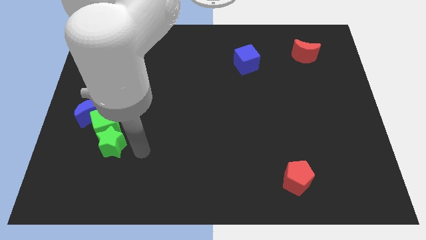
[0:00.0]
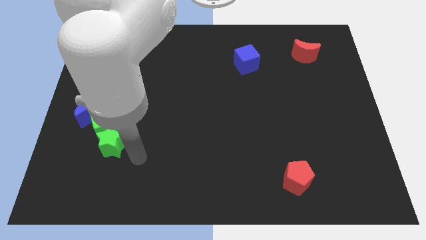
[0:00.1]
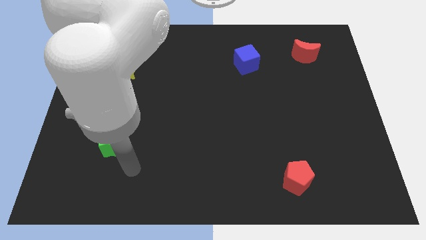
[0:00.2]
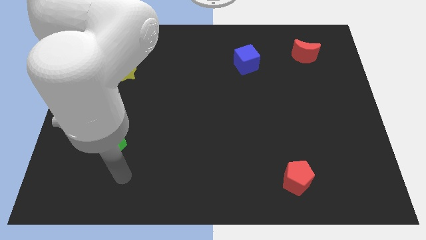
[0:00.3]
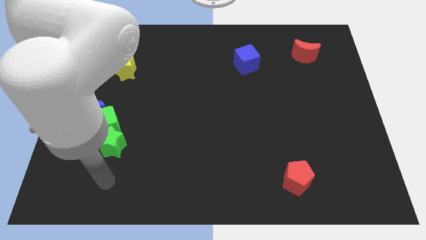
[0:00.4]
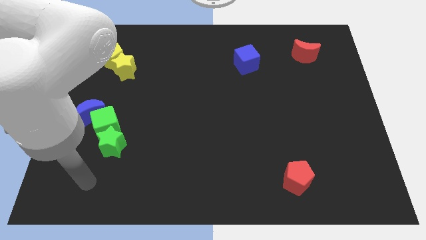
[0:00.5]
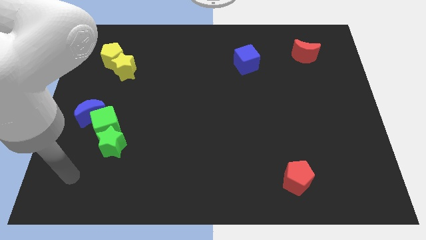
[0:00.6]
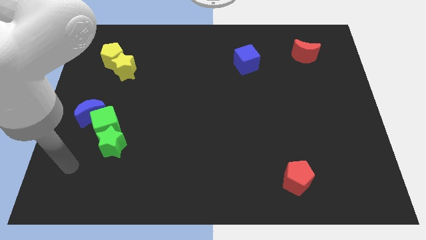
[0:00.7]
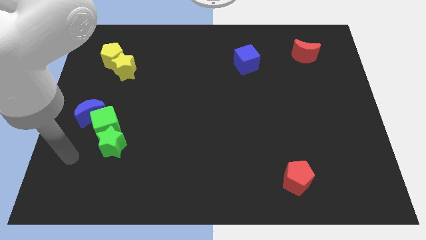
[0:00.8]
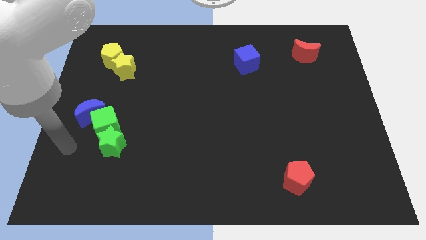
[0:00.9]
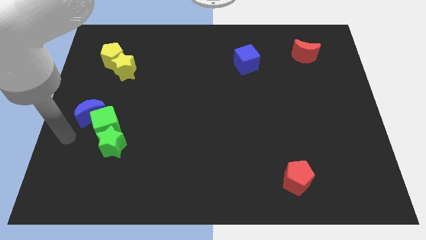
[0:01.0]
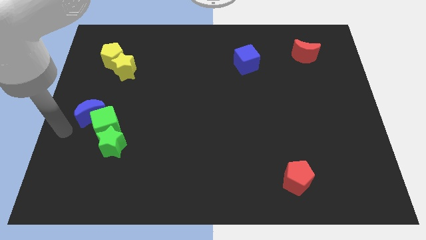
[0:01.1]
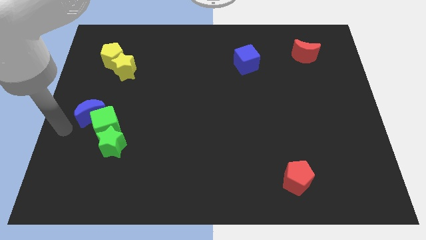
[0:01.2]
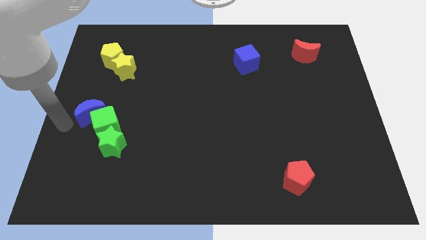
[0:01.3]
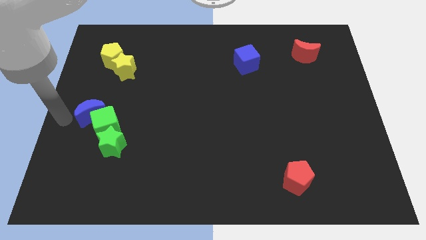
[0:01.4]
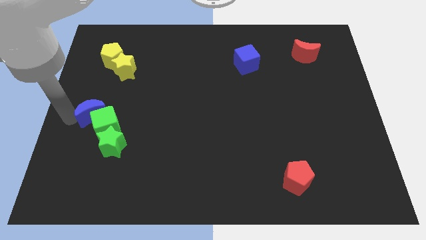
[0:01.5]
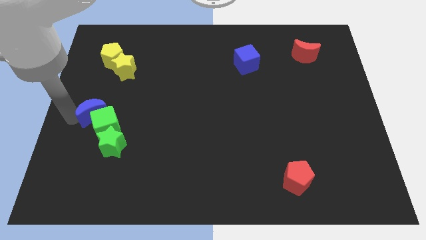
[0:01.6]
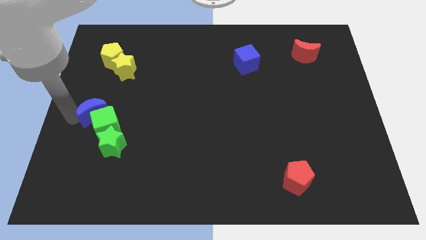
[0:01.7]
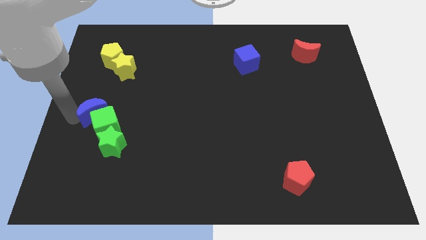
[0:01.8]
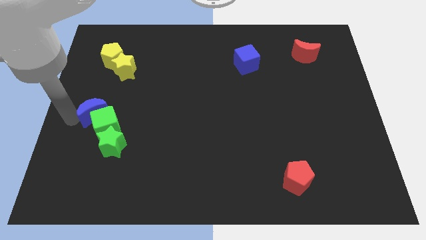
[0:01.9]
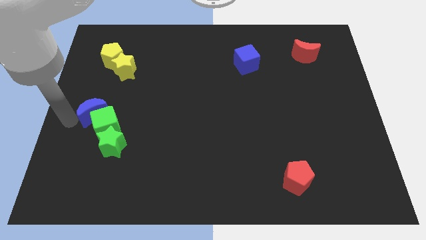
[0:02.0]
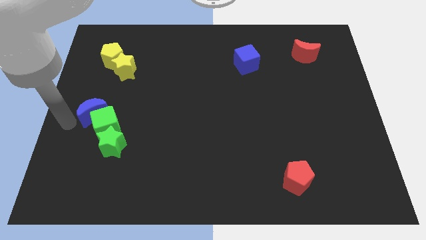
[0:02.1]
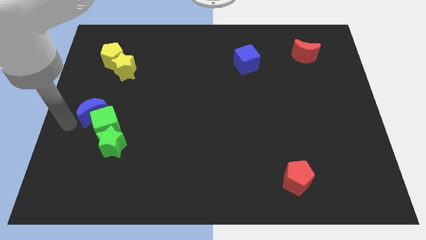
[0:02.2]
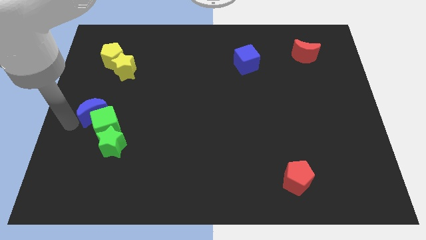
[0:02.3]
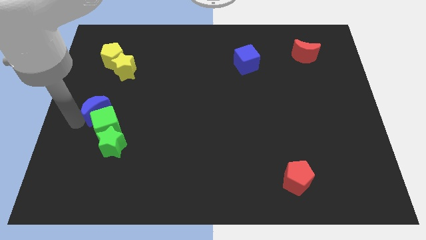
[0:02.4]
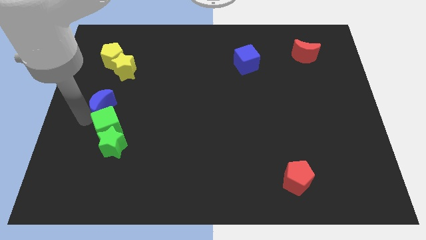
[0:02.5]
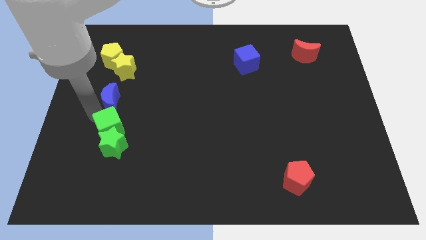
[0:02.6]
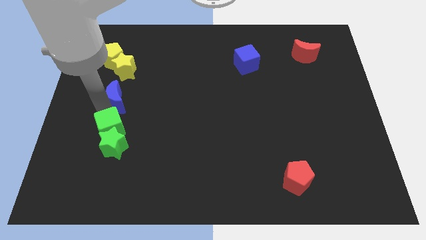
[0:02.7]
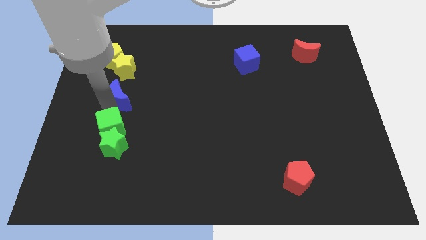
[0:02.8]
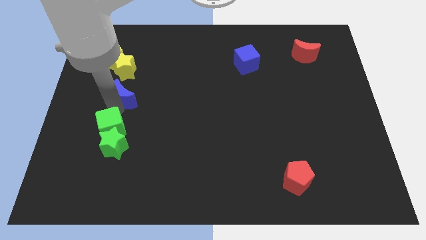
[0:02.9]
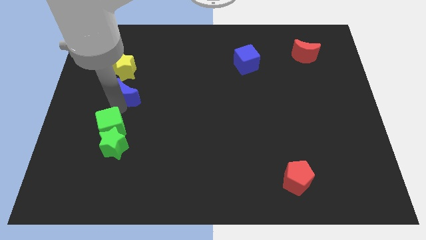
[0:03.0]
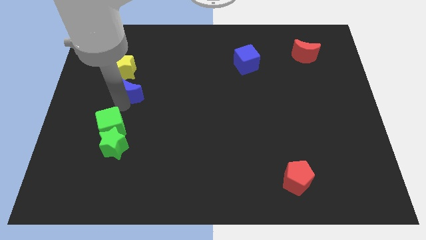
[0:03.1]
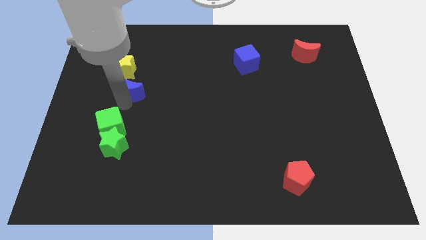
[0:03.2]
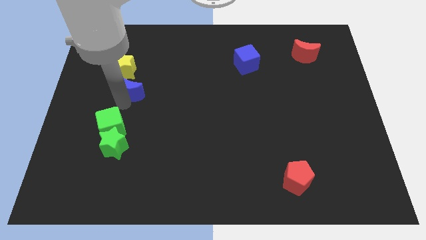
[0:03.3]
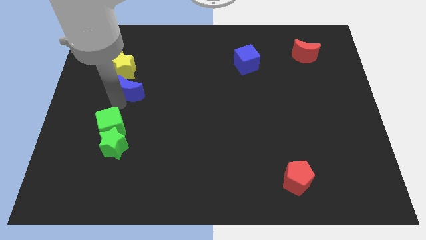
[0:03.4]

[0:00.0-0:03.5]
place the blue moon below yellow star

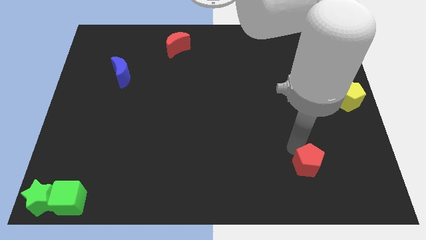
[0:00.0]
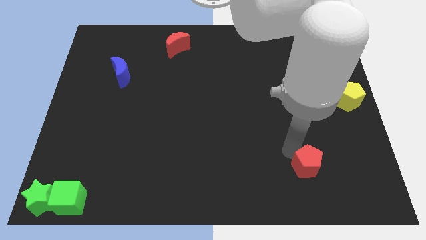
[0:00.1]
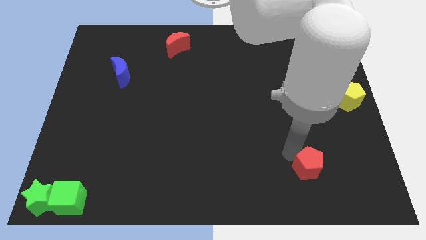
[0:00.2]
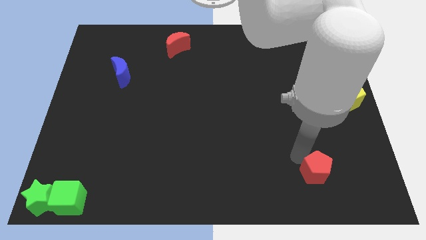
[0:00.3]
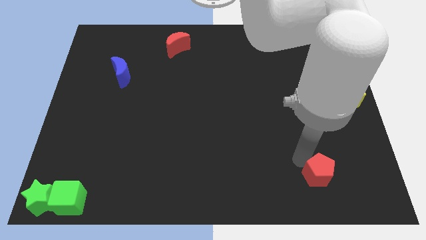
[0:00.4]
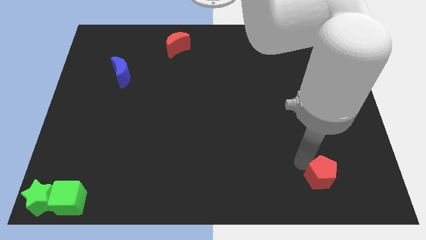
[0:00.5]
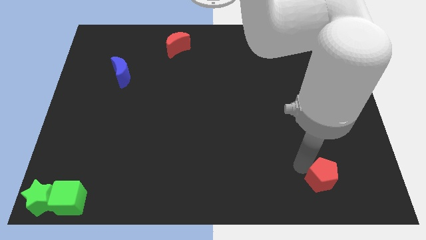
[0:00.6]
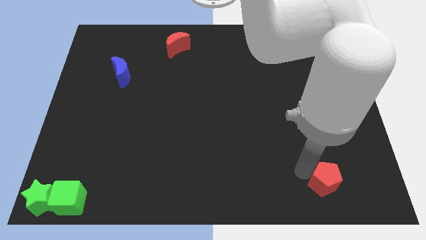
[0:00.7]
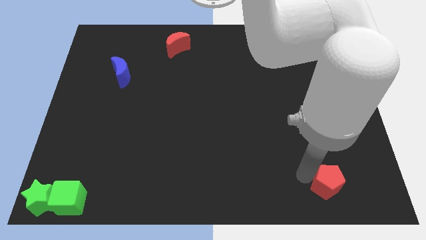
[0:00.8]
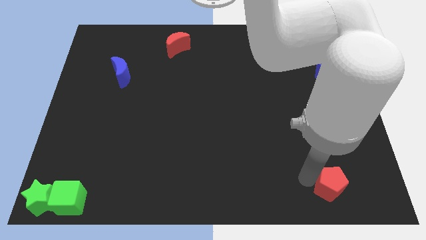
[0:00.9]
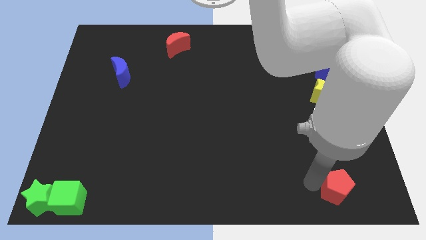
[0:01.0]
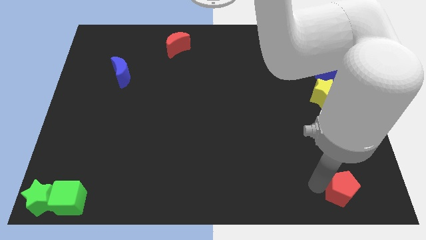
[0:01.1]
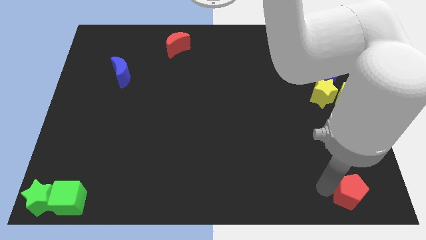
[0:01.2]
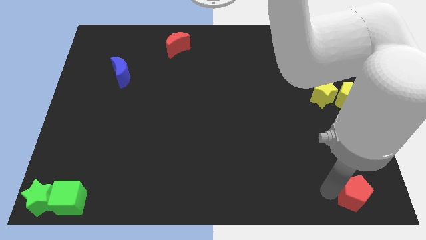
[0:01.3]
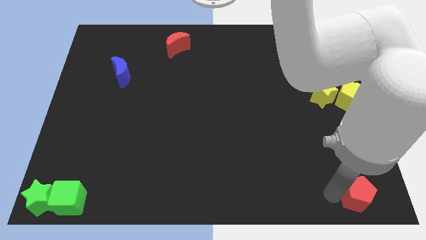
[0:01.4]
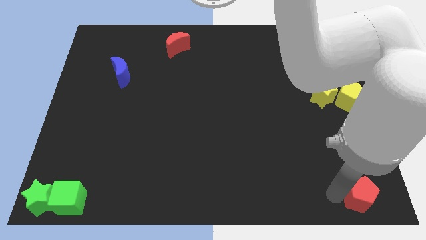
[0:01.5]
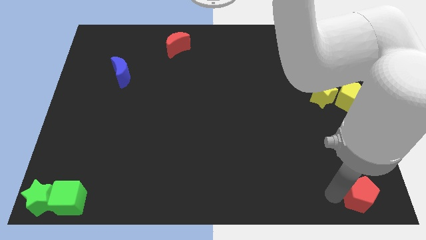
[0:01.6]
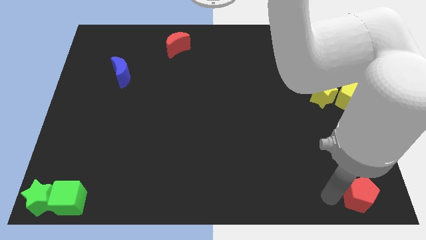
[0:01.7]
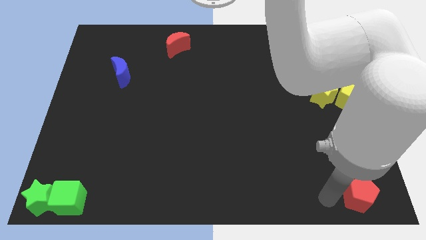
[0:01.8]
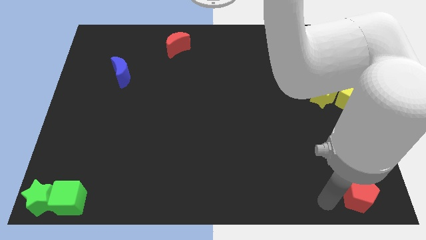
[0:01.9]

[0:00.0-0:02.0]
push the red pentagon to the right bottom

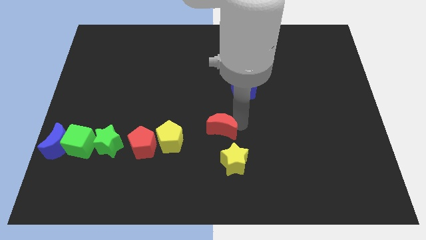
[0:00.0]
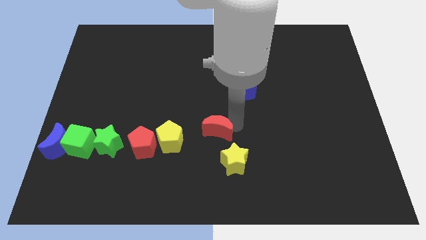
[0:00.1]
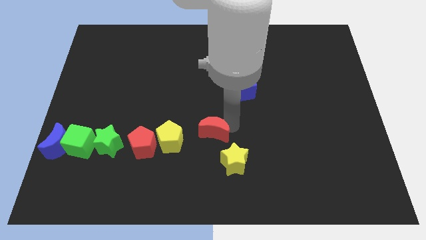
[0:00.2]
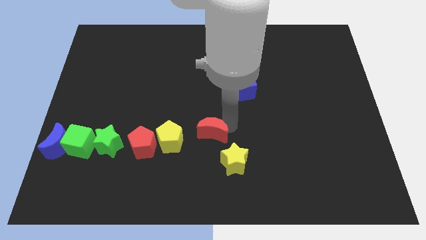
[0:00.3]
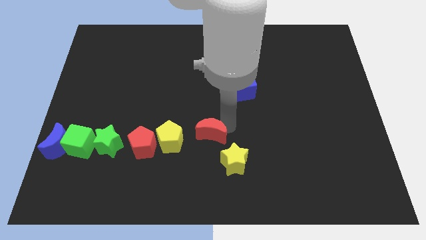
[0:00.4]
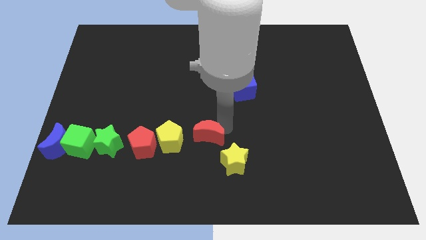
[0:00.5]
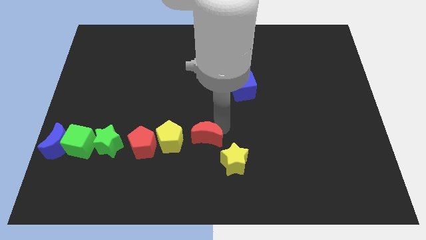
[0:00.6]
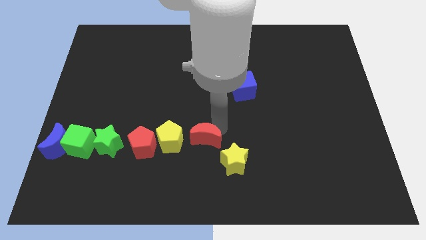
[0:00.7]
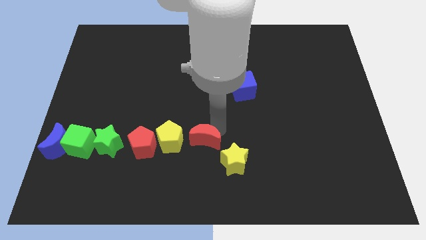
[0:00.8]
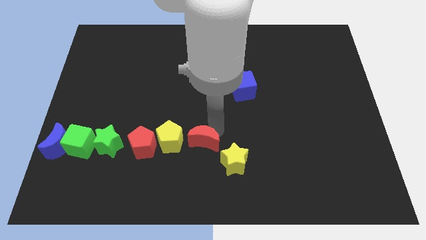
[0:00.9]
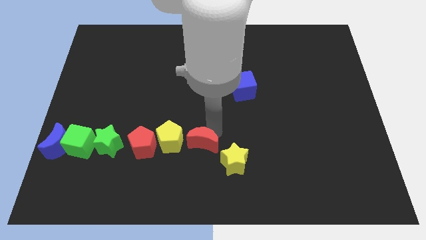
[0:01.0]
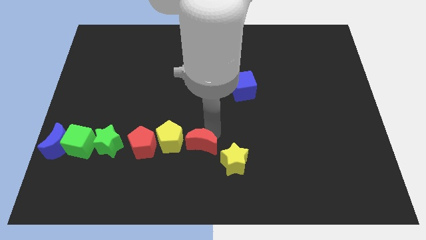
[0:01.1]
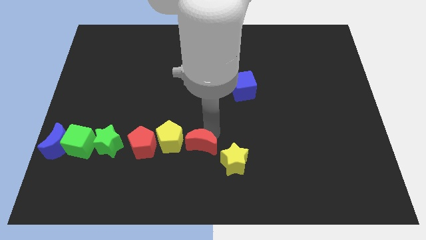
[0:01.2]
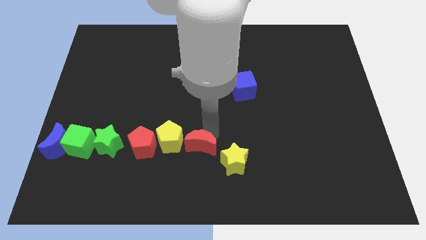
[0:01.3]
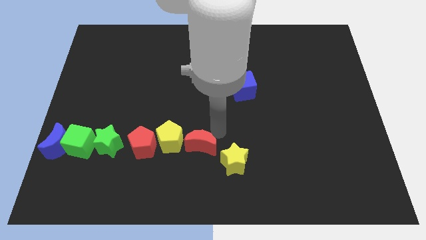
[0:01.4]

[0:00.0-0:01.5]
move red crescent to the left of yellow star

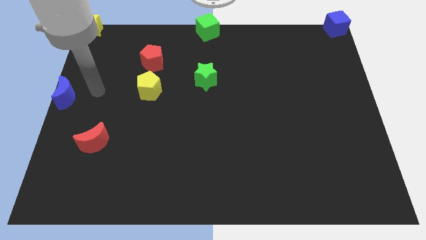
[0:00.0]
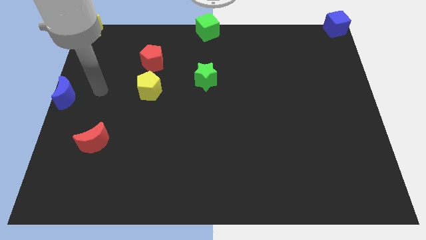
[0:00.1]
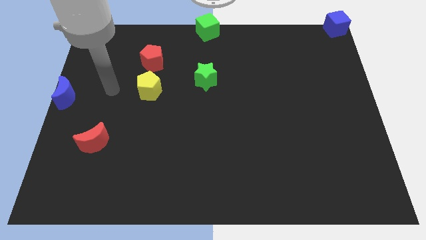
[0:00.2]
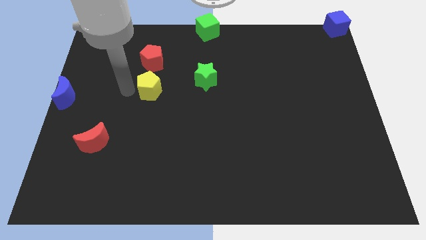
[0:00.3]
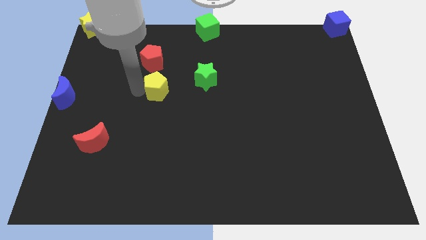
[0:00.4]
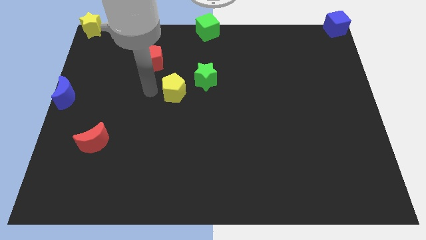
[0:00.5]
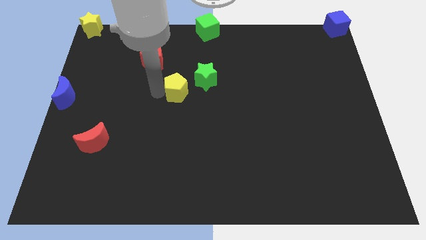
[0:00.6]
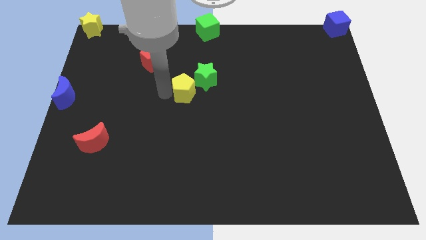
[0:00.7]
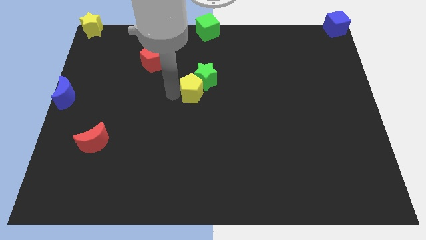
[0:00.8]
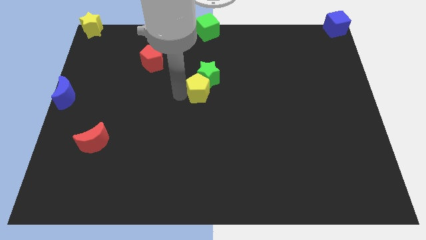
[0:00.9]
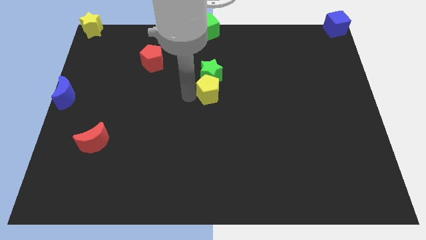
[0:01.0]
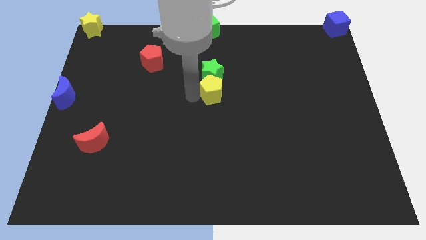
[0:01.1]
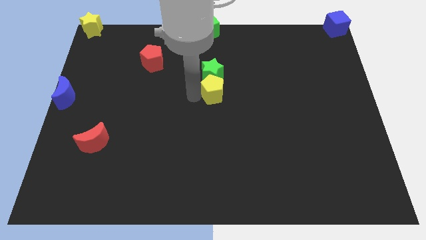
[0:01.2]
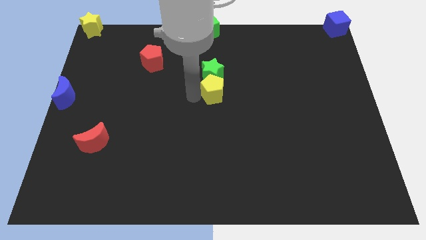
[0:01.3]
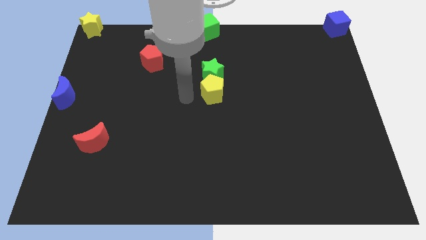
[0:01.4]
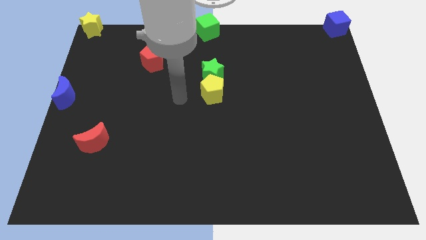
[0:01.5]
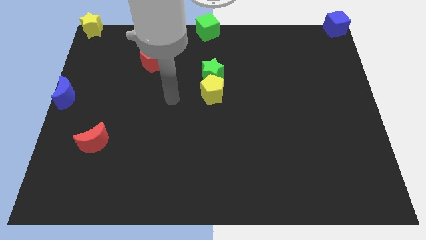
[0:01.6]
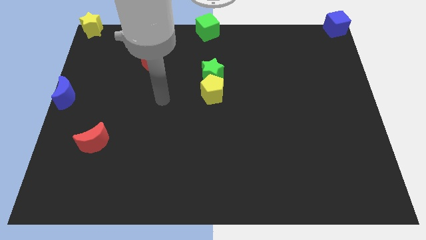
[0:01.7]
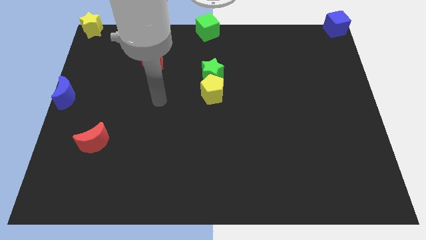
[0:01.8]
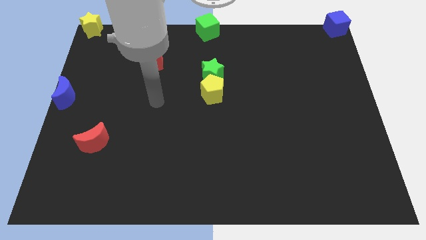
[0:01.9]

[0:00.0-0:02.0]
move yellow pentagon into green star
